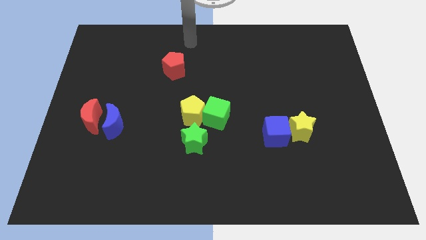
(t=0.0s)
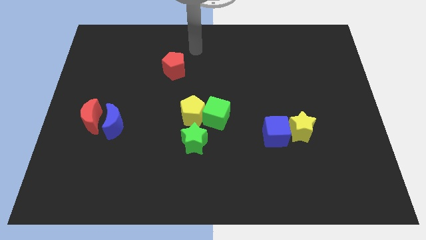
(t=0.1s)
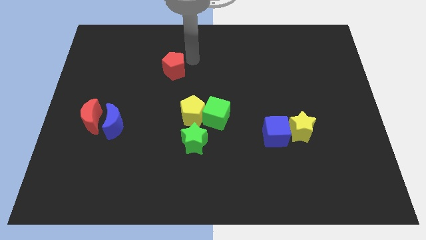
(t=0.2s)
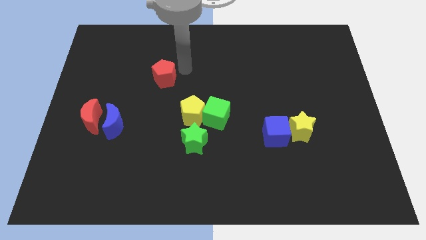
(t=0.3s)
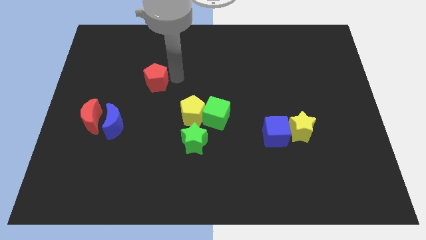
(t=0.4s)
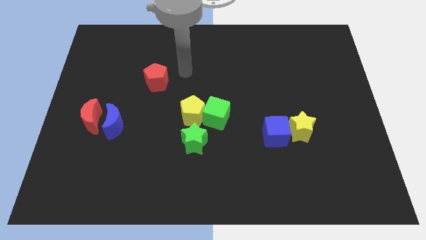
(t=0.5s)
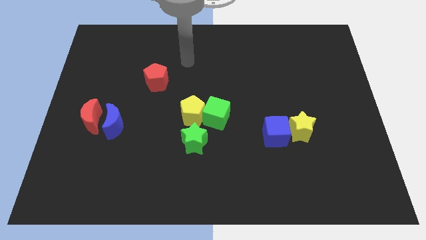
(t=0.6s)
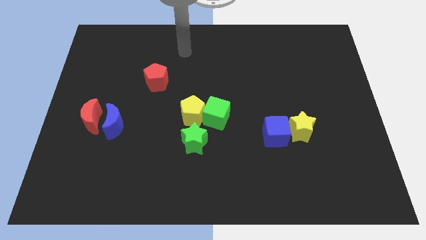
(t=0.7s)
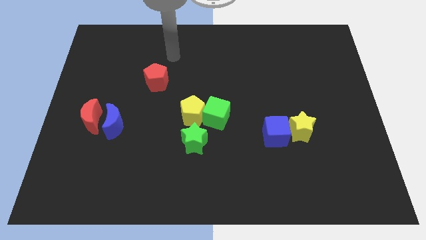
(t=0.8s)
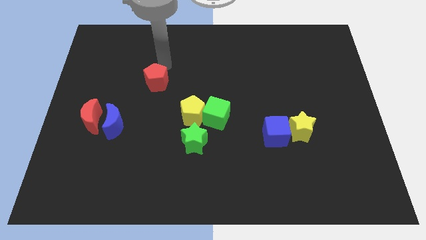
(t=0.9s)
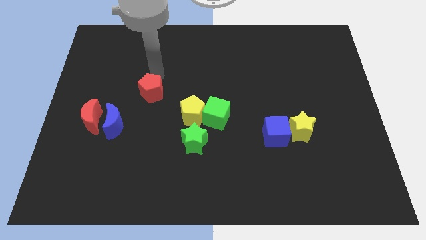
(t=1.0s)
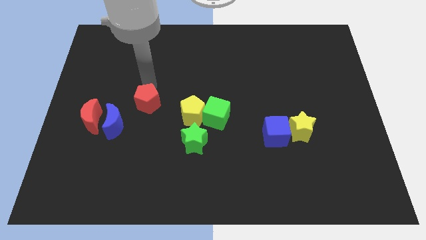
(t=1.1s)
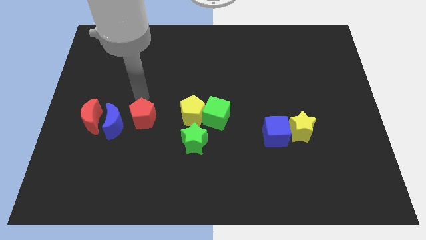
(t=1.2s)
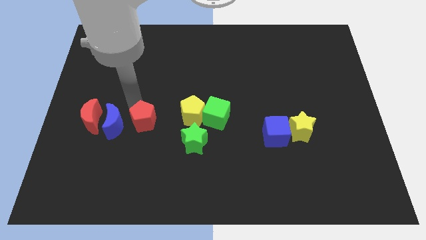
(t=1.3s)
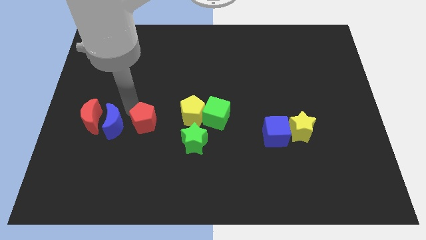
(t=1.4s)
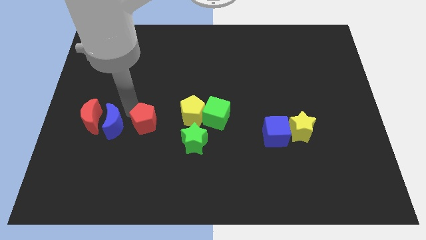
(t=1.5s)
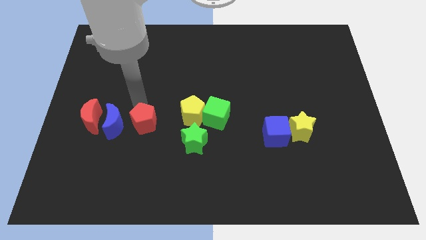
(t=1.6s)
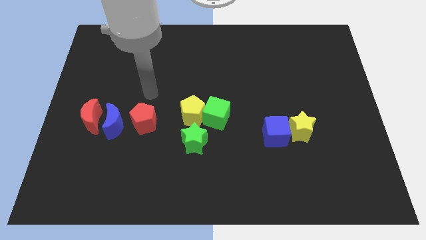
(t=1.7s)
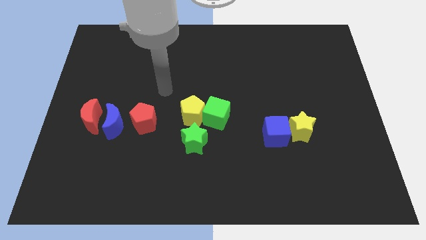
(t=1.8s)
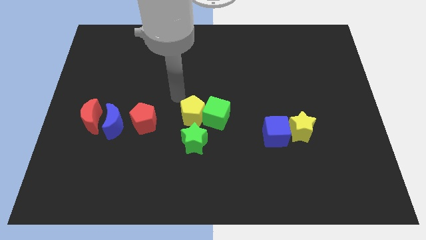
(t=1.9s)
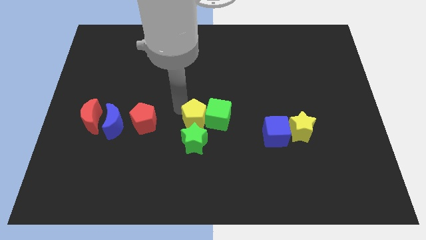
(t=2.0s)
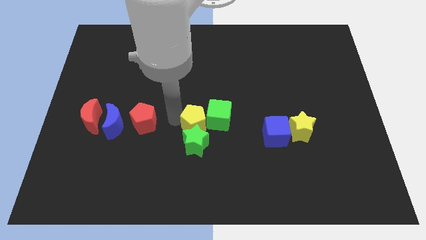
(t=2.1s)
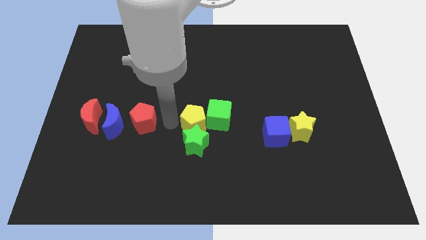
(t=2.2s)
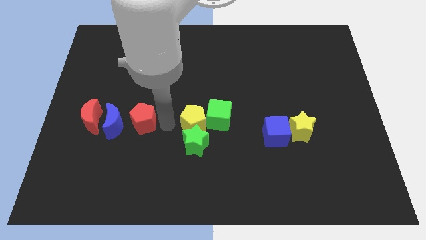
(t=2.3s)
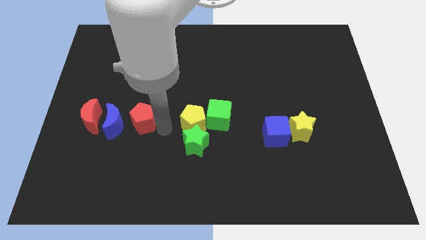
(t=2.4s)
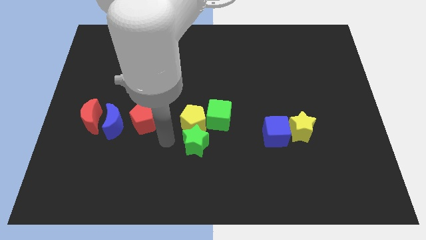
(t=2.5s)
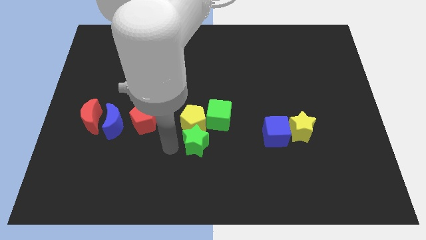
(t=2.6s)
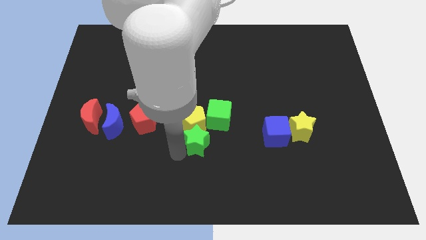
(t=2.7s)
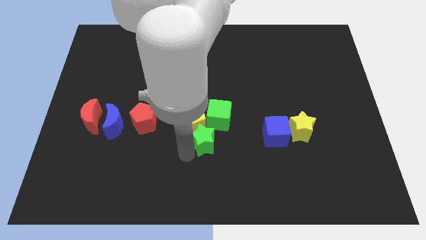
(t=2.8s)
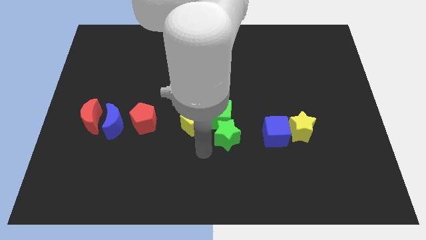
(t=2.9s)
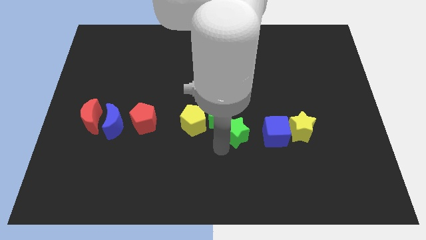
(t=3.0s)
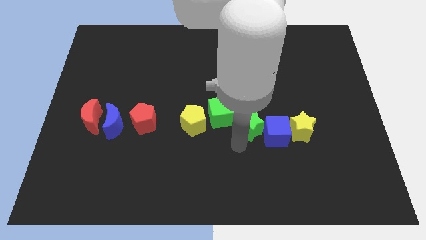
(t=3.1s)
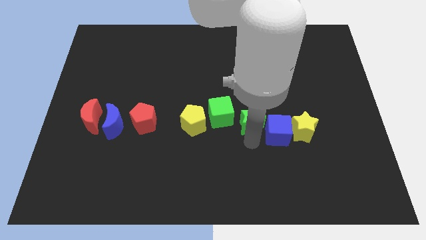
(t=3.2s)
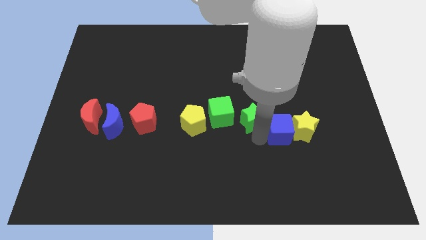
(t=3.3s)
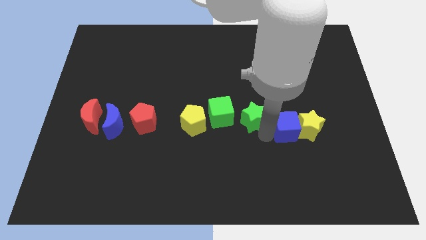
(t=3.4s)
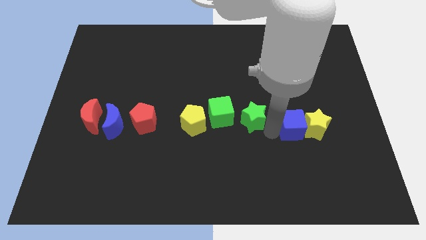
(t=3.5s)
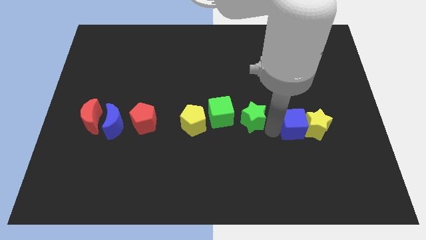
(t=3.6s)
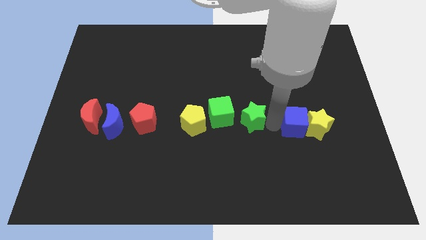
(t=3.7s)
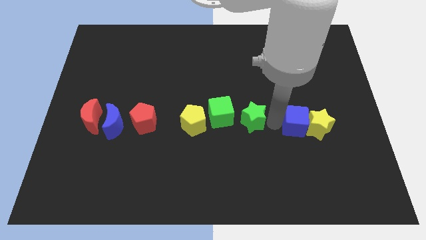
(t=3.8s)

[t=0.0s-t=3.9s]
place the red pentagon right to the blue crescent to form a horizontal line

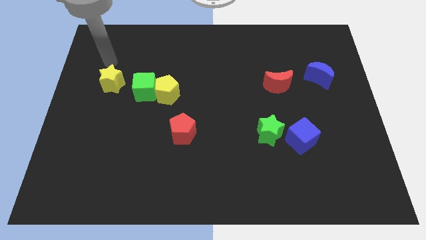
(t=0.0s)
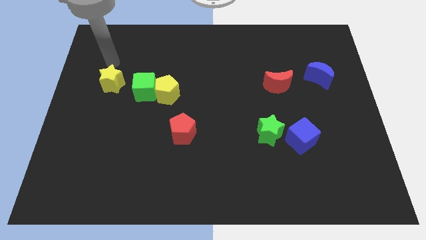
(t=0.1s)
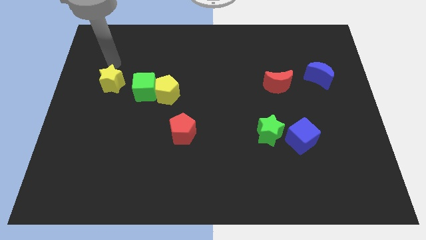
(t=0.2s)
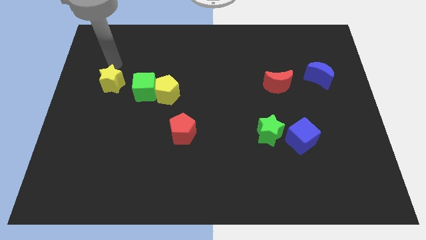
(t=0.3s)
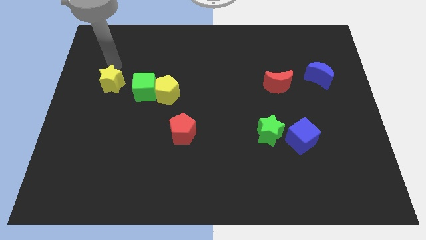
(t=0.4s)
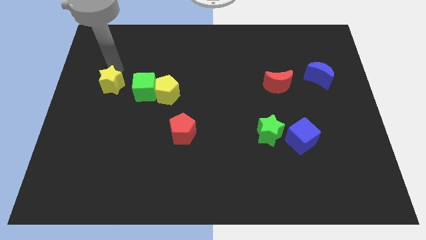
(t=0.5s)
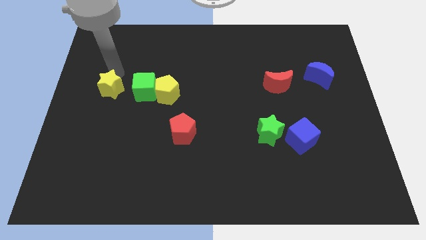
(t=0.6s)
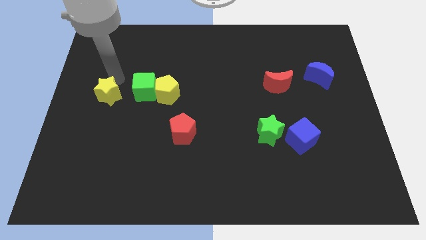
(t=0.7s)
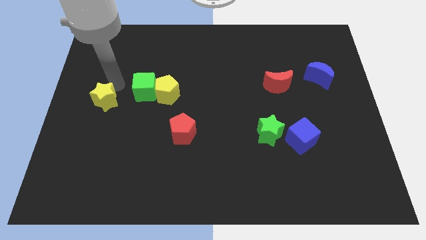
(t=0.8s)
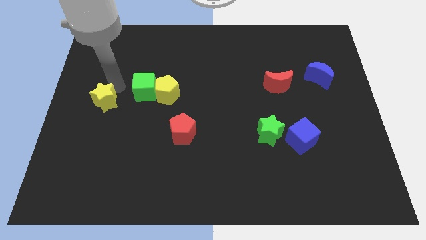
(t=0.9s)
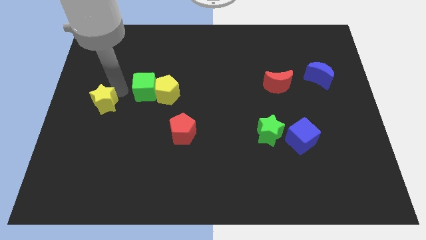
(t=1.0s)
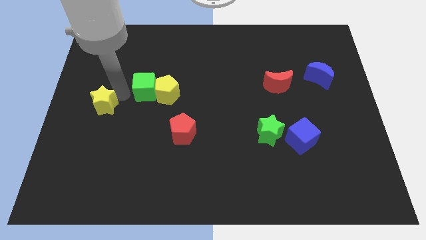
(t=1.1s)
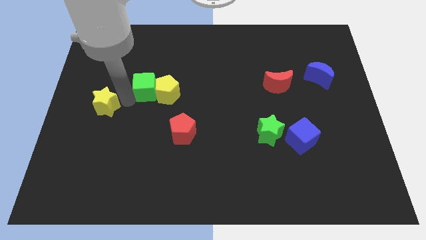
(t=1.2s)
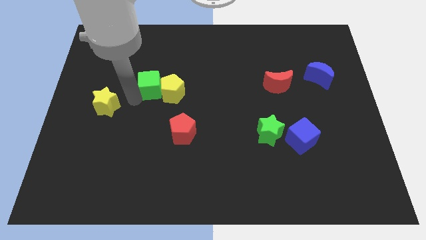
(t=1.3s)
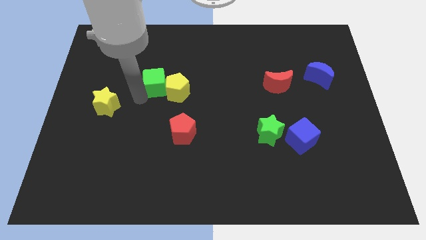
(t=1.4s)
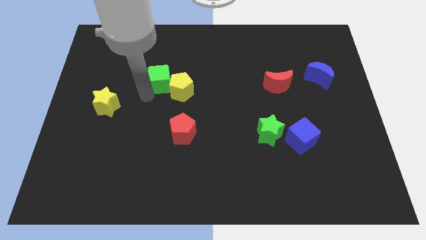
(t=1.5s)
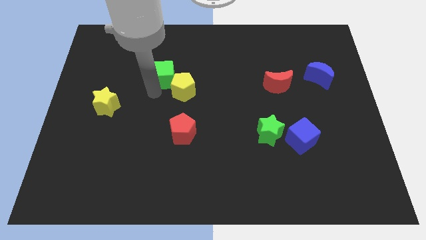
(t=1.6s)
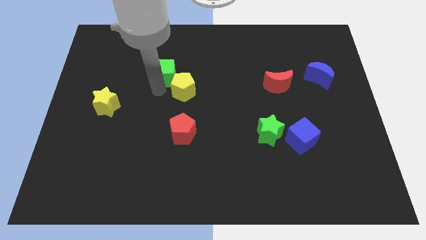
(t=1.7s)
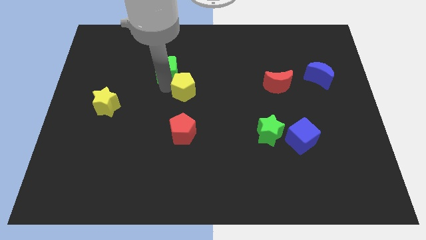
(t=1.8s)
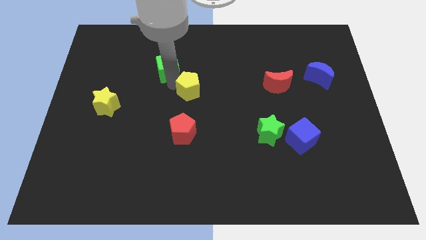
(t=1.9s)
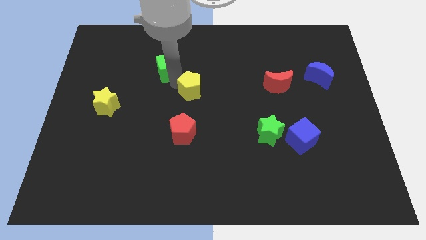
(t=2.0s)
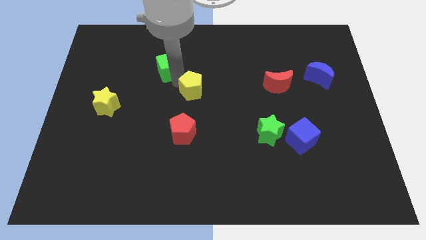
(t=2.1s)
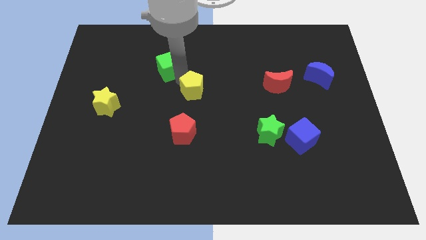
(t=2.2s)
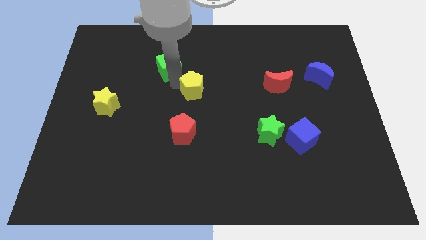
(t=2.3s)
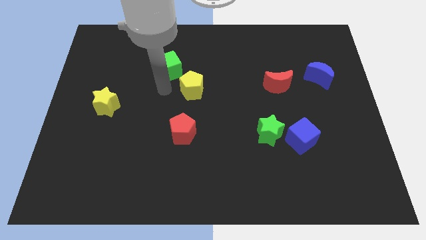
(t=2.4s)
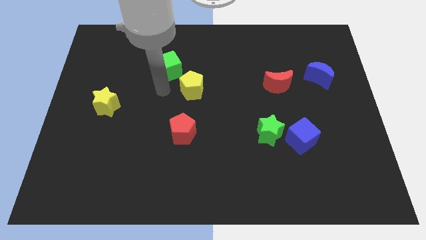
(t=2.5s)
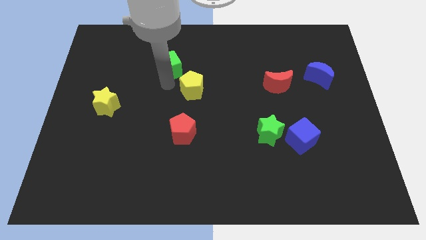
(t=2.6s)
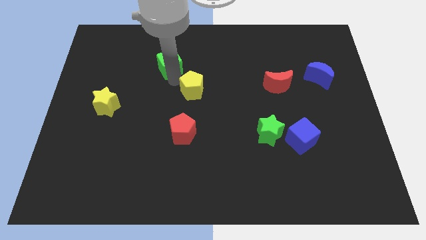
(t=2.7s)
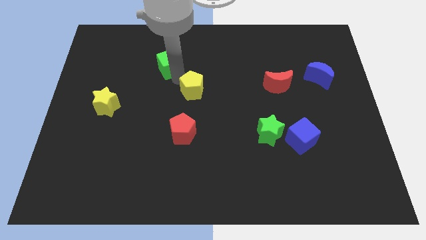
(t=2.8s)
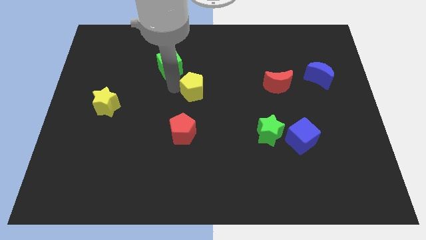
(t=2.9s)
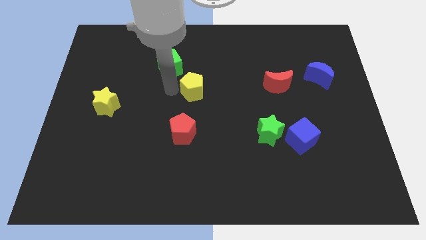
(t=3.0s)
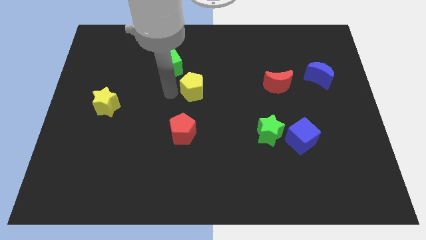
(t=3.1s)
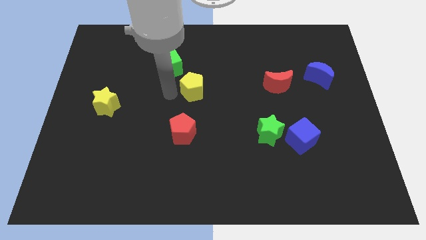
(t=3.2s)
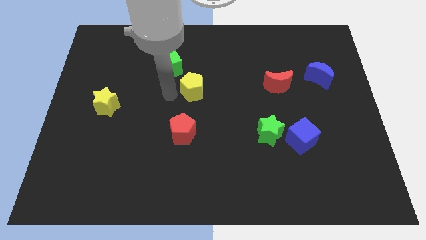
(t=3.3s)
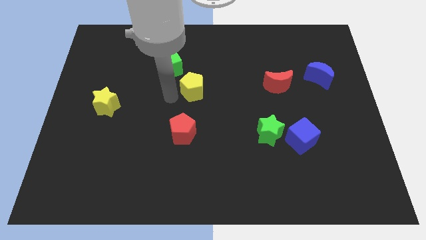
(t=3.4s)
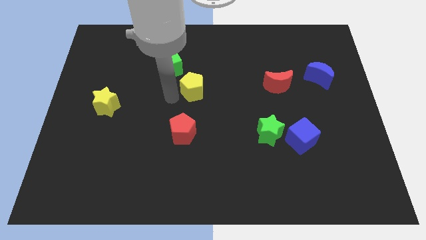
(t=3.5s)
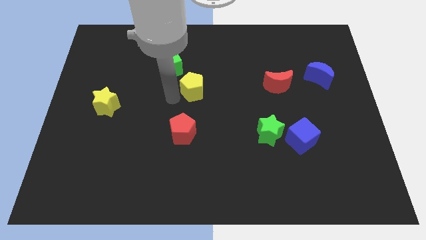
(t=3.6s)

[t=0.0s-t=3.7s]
separate the green cube and the yellow star

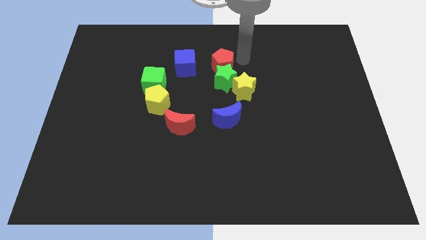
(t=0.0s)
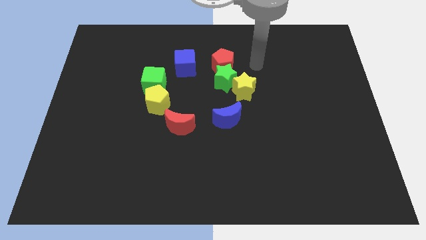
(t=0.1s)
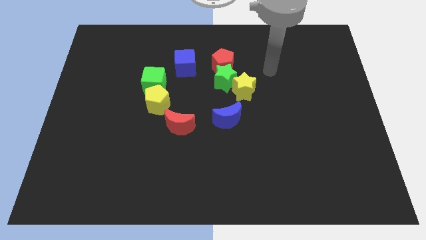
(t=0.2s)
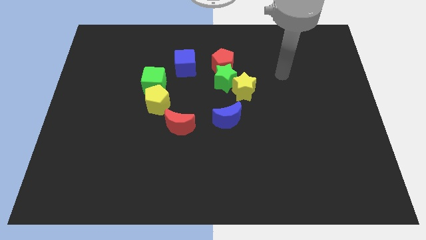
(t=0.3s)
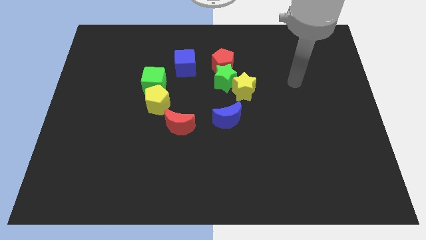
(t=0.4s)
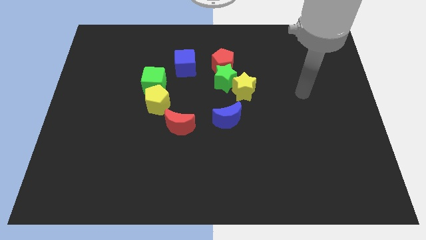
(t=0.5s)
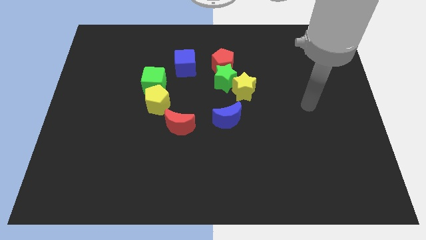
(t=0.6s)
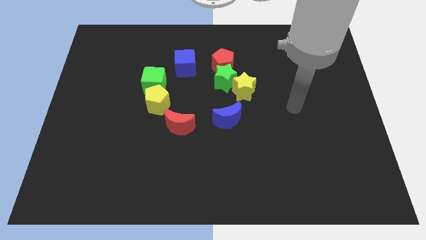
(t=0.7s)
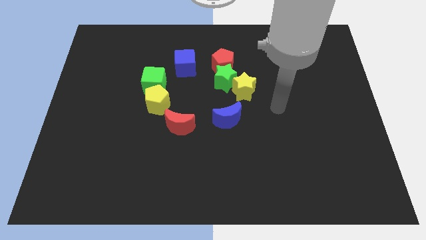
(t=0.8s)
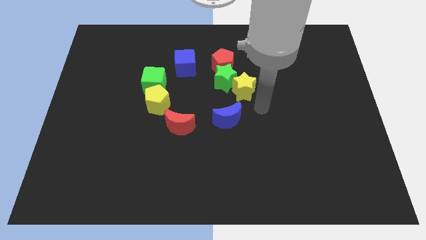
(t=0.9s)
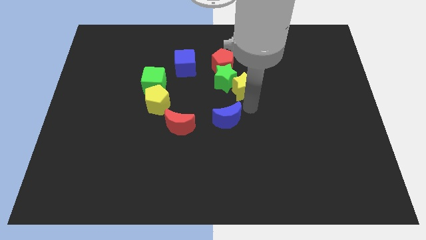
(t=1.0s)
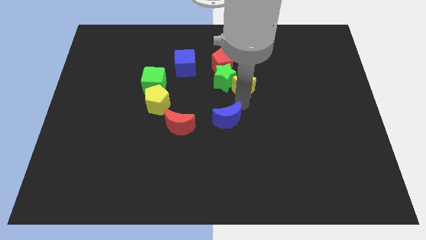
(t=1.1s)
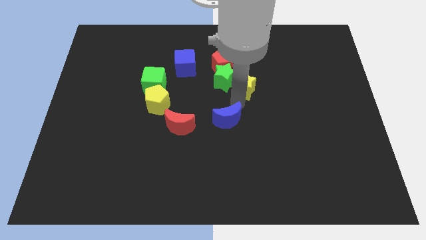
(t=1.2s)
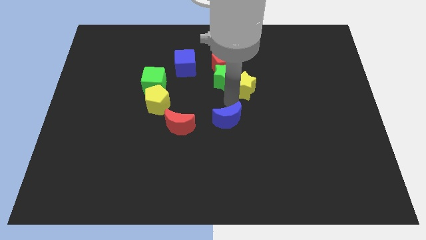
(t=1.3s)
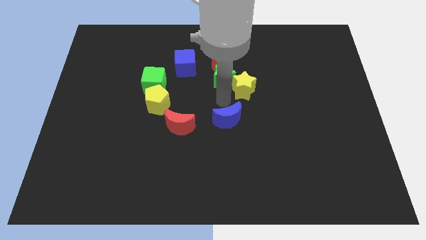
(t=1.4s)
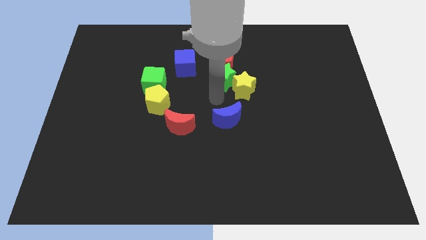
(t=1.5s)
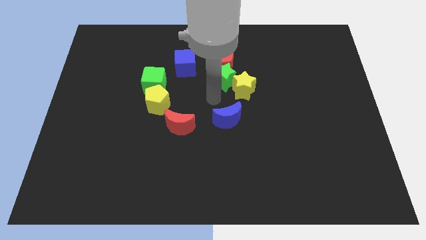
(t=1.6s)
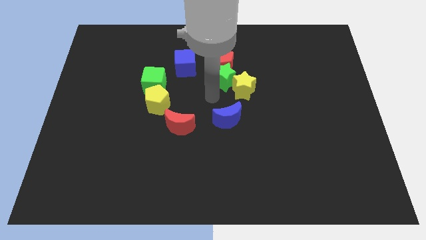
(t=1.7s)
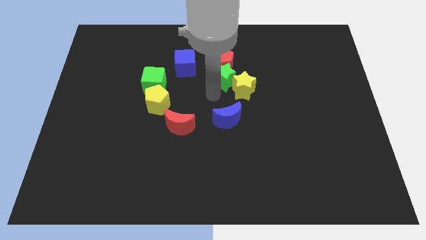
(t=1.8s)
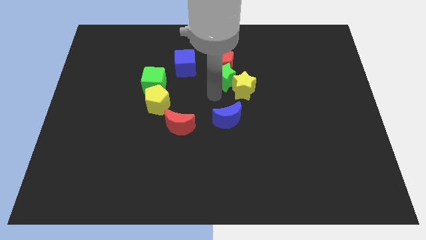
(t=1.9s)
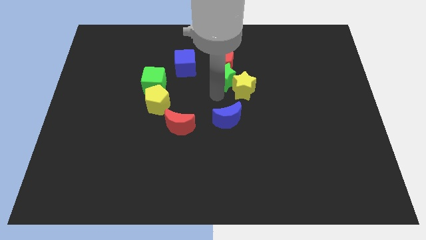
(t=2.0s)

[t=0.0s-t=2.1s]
point your arm at the bottom side of the green star
